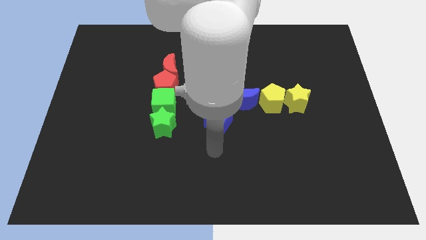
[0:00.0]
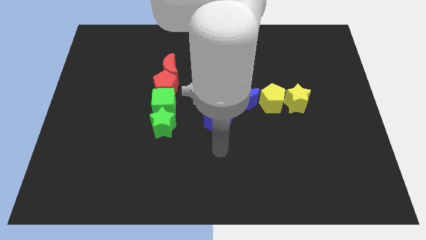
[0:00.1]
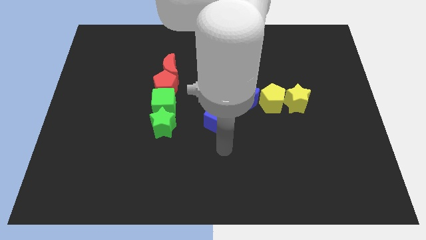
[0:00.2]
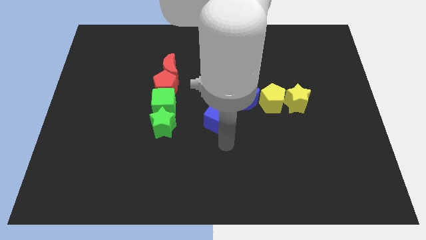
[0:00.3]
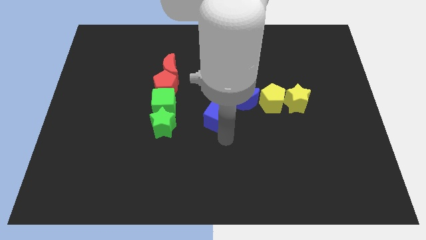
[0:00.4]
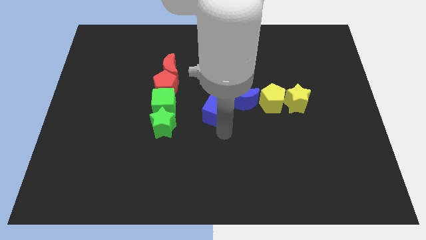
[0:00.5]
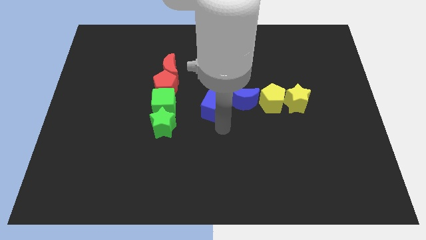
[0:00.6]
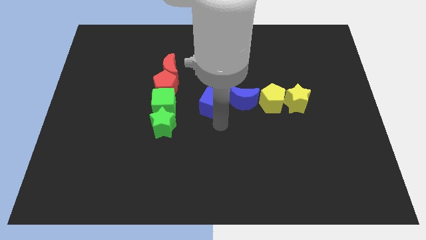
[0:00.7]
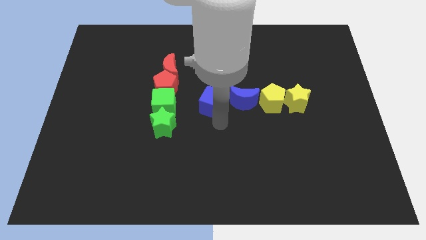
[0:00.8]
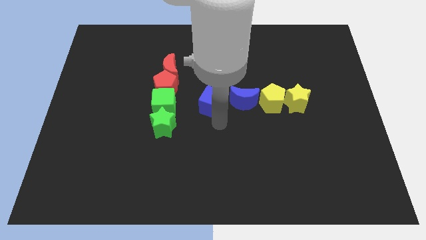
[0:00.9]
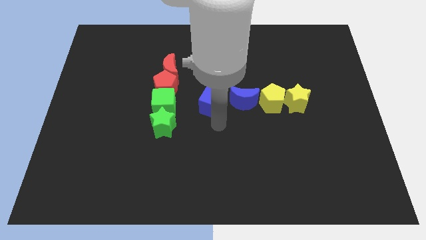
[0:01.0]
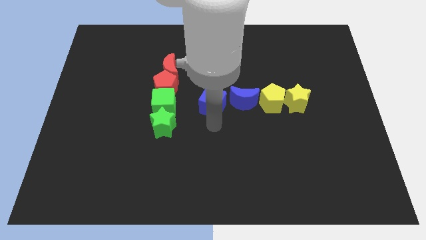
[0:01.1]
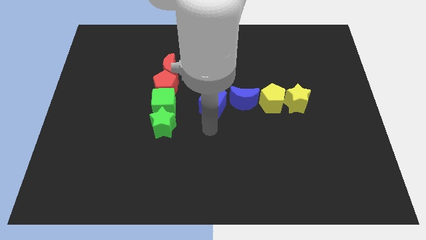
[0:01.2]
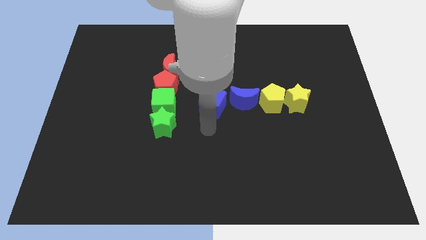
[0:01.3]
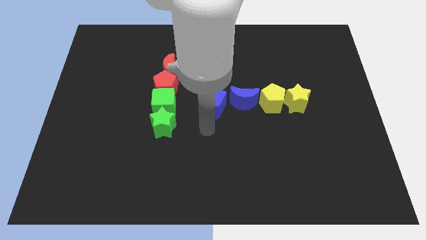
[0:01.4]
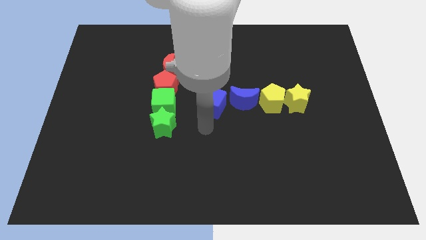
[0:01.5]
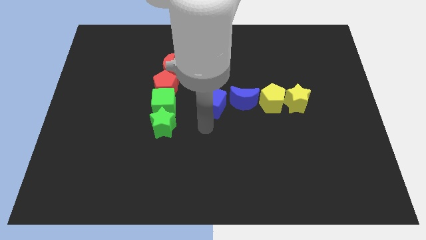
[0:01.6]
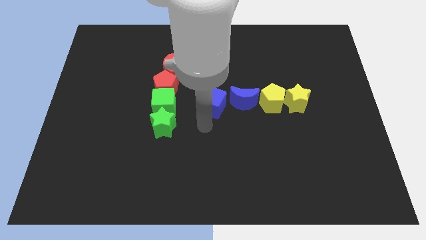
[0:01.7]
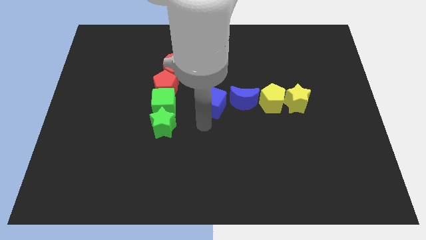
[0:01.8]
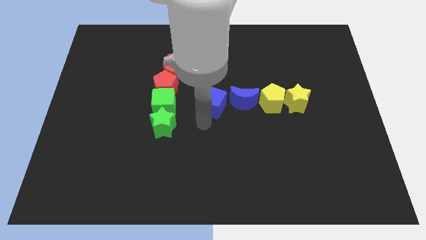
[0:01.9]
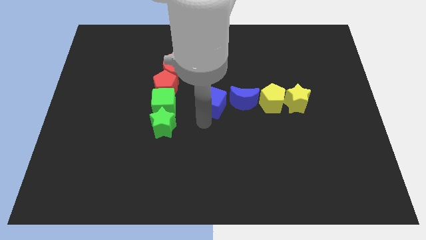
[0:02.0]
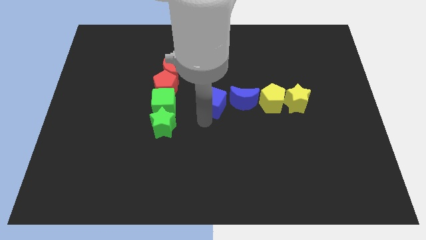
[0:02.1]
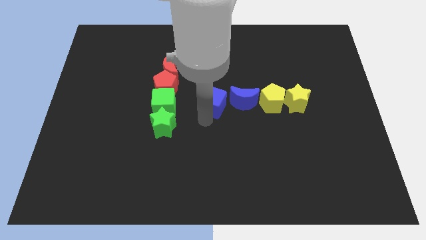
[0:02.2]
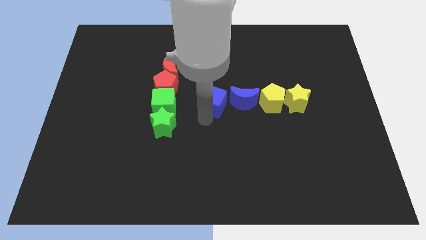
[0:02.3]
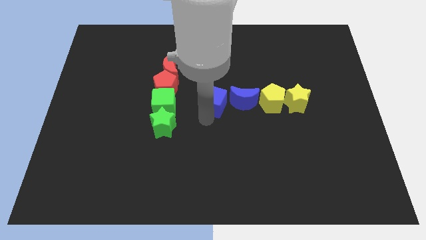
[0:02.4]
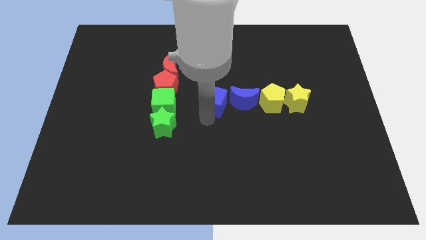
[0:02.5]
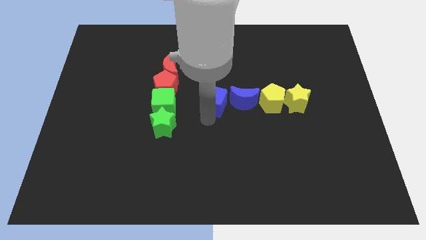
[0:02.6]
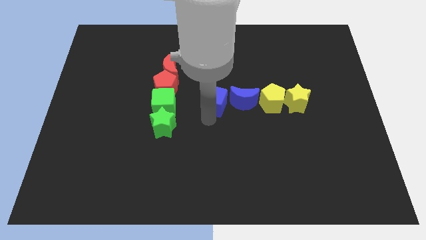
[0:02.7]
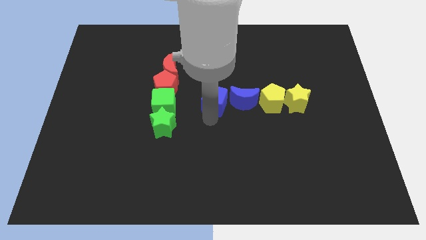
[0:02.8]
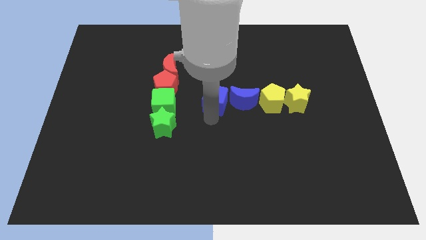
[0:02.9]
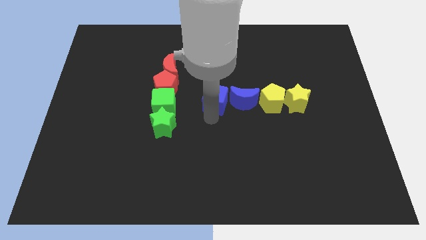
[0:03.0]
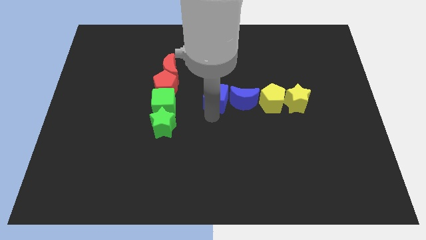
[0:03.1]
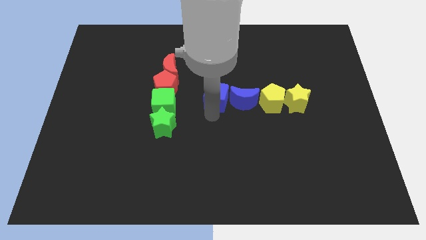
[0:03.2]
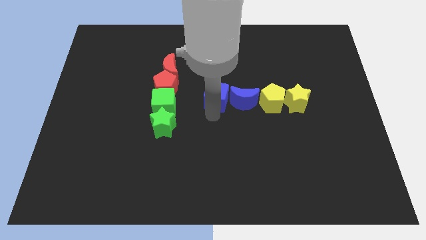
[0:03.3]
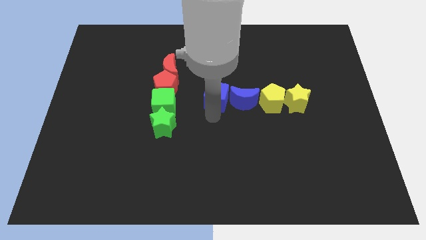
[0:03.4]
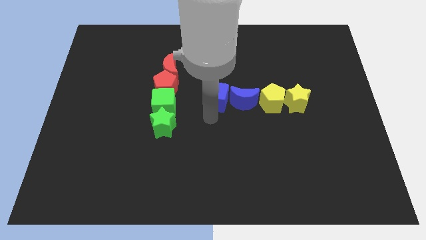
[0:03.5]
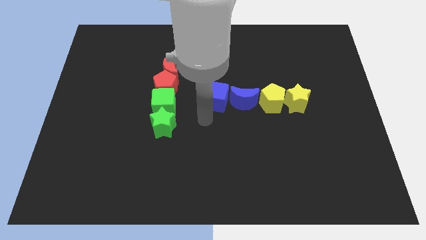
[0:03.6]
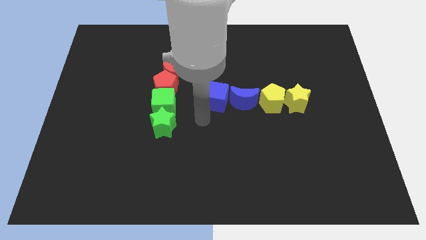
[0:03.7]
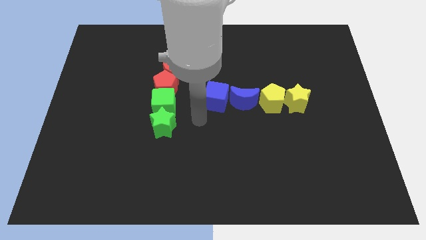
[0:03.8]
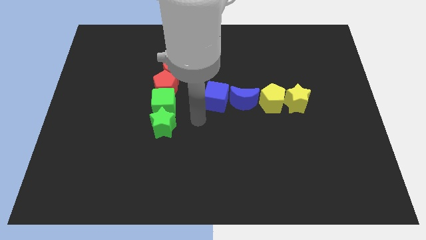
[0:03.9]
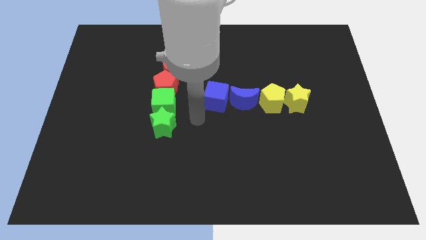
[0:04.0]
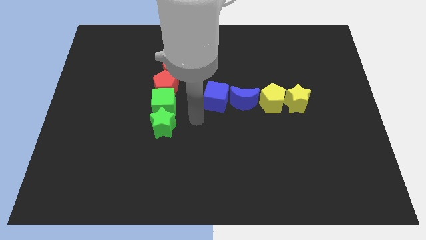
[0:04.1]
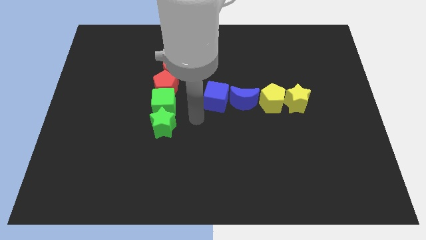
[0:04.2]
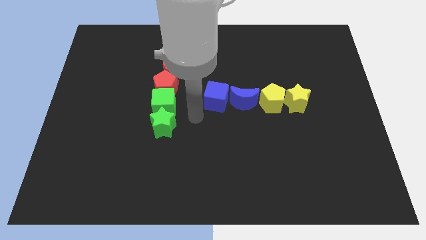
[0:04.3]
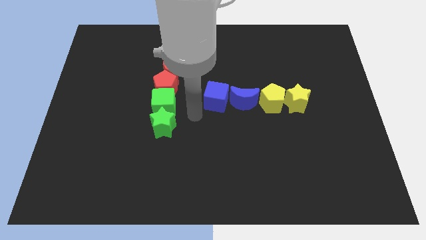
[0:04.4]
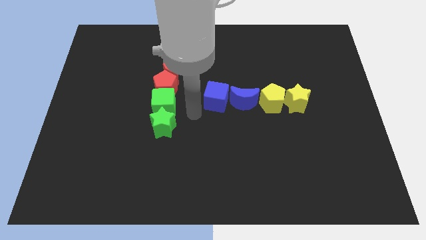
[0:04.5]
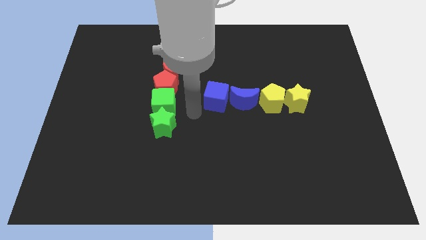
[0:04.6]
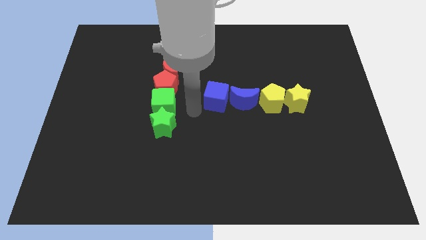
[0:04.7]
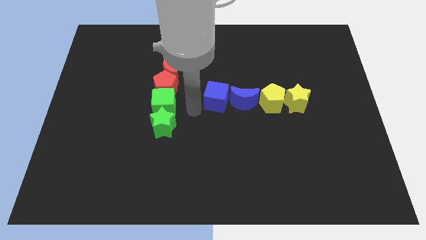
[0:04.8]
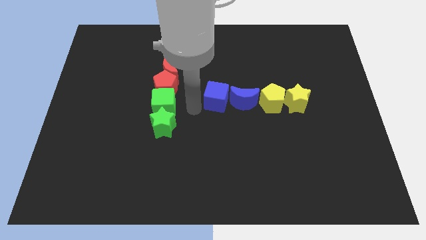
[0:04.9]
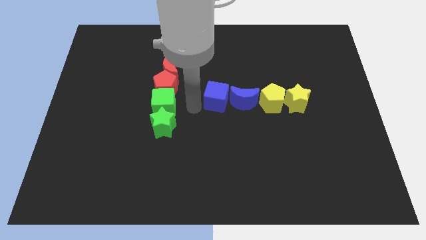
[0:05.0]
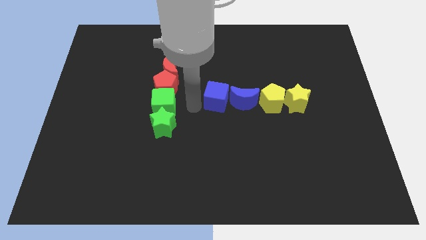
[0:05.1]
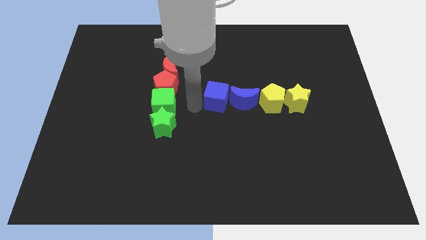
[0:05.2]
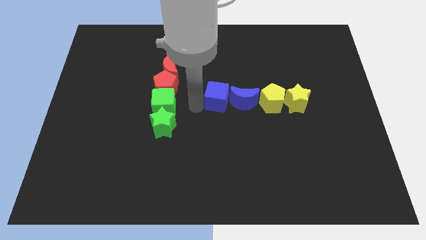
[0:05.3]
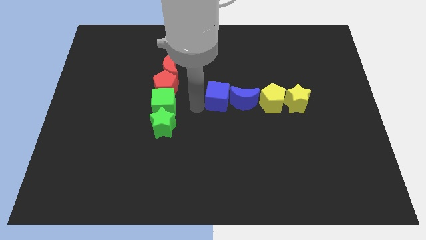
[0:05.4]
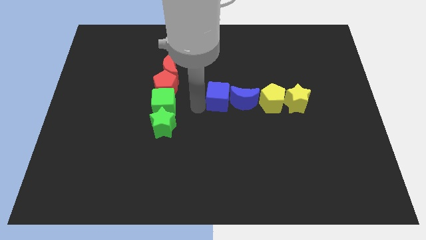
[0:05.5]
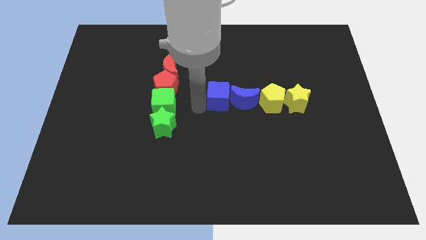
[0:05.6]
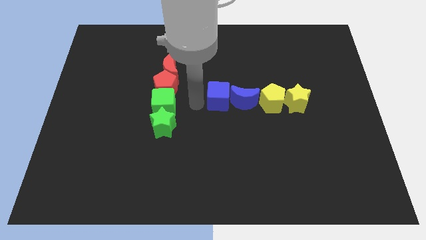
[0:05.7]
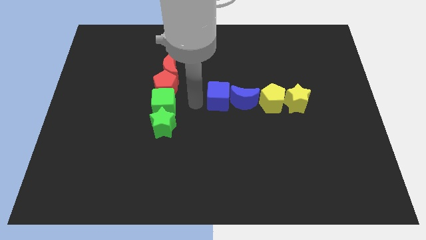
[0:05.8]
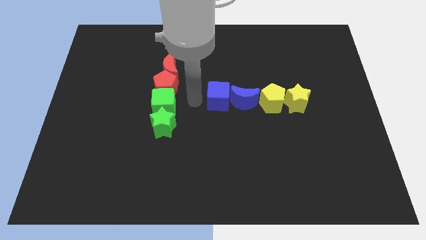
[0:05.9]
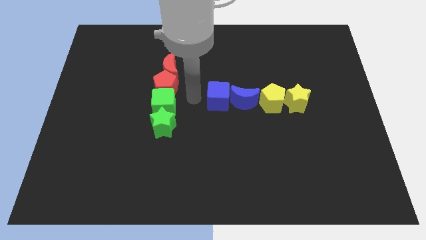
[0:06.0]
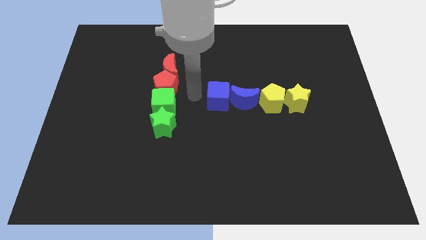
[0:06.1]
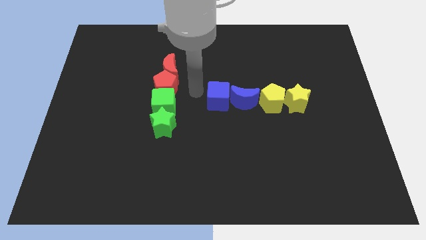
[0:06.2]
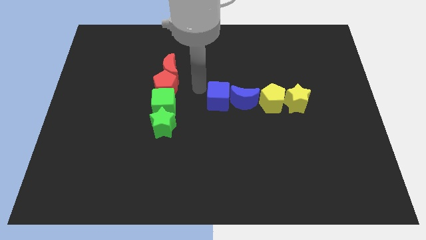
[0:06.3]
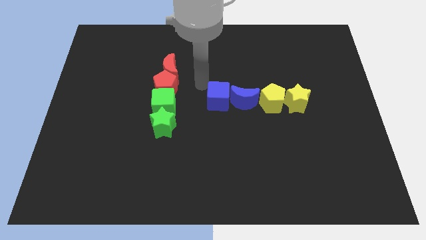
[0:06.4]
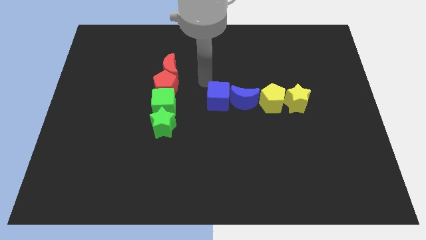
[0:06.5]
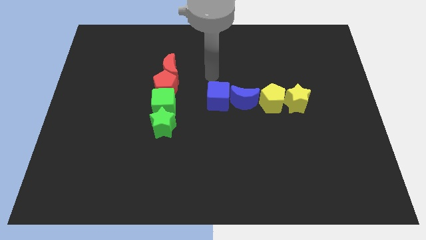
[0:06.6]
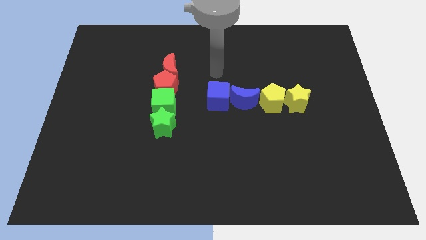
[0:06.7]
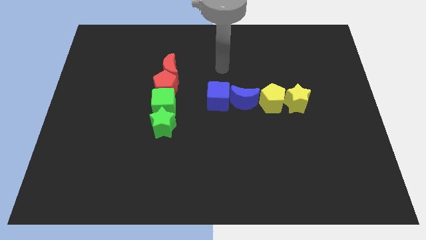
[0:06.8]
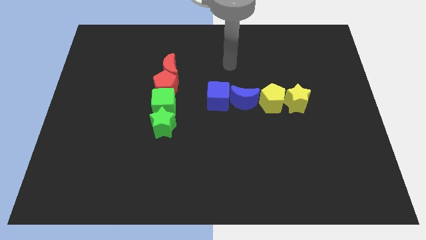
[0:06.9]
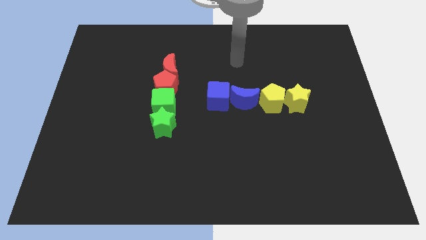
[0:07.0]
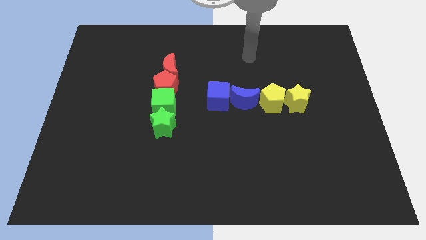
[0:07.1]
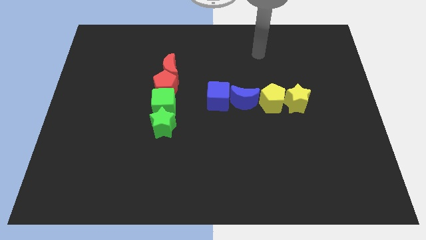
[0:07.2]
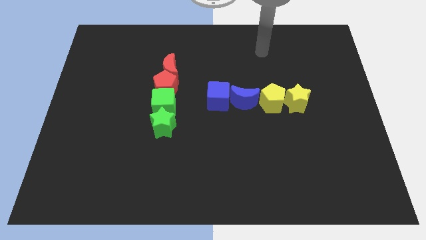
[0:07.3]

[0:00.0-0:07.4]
adjust the blue cube to form a horizontal line with blue crescent and the yellow blocks

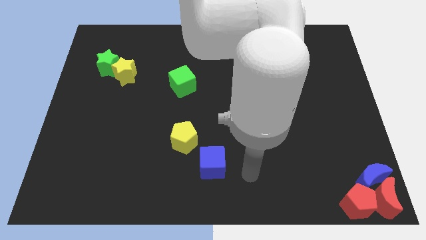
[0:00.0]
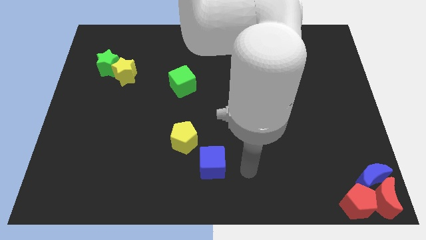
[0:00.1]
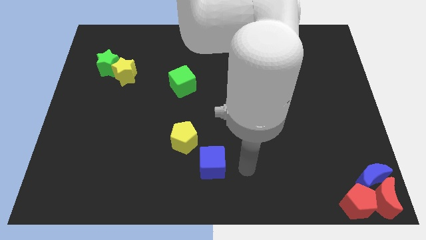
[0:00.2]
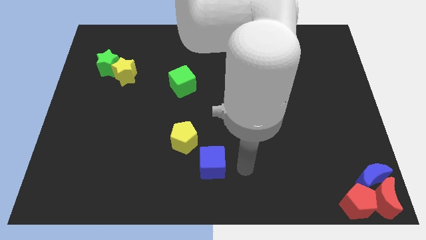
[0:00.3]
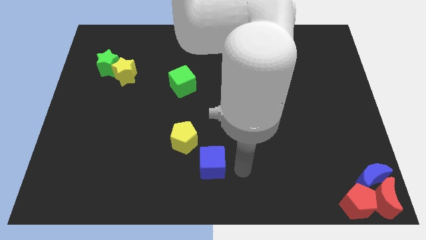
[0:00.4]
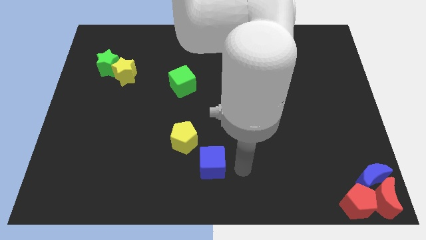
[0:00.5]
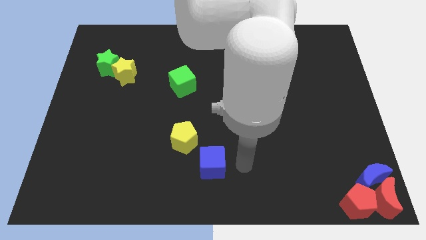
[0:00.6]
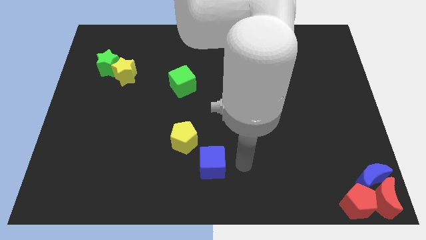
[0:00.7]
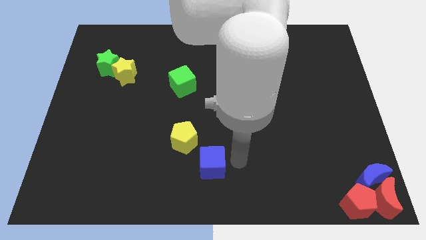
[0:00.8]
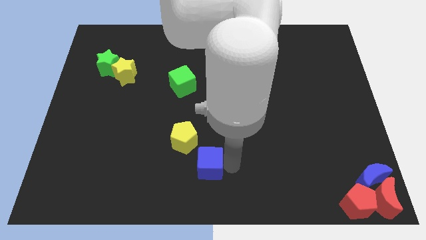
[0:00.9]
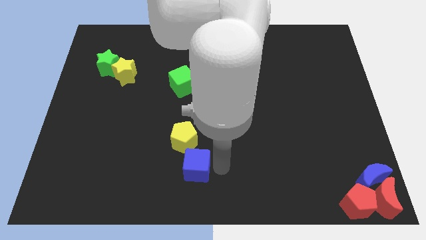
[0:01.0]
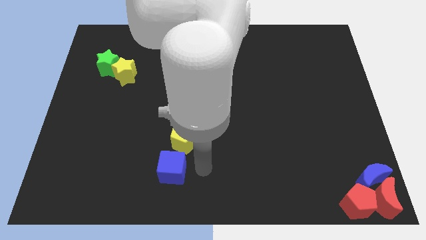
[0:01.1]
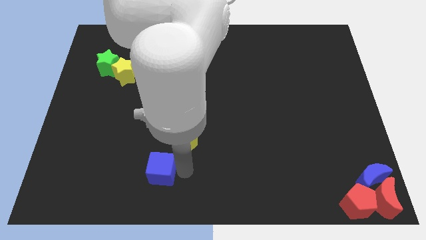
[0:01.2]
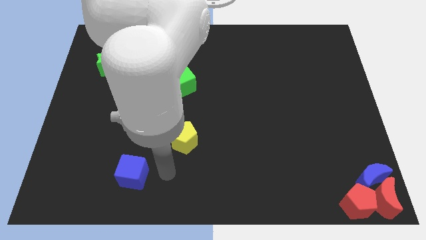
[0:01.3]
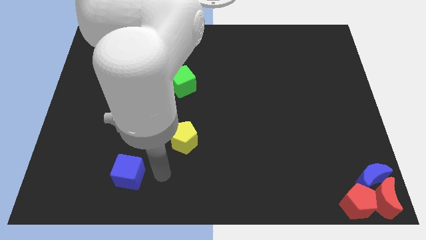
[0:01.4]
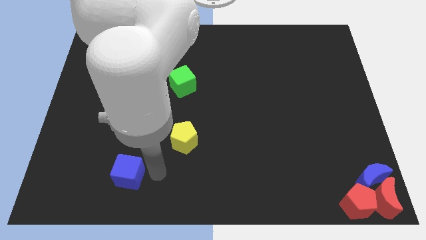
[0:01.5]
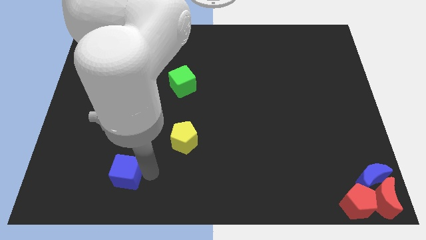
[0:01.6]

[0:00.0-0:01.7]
place the blue cube diagonally to the bottom left side of the yellow pentagon
